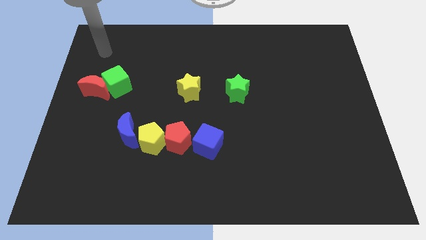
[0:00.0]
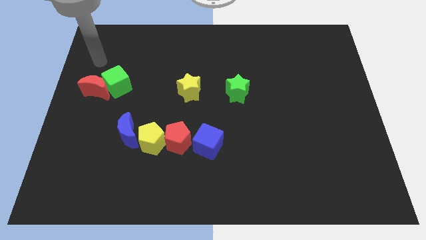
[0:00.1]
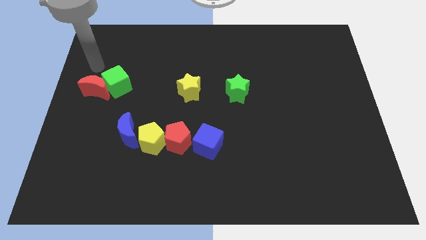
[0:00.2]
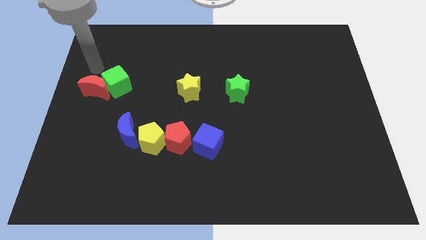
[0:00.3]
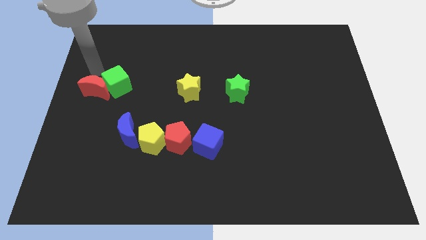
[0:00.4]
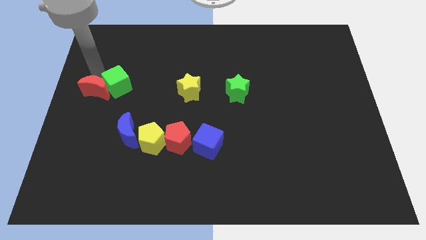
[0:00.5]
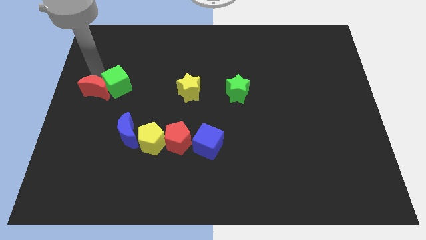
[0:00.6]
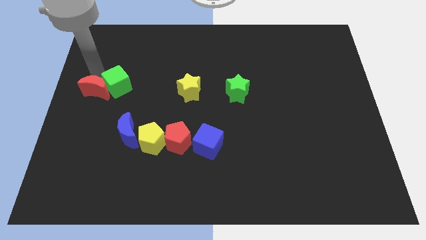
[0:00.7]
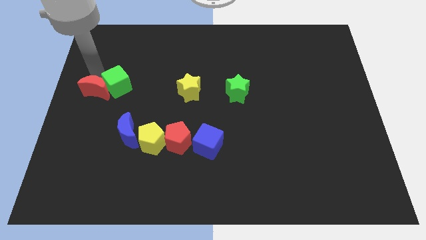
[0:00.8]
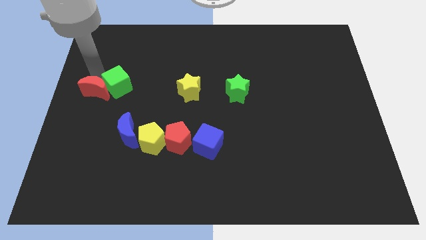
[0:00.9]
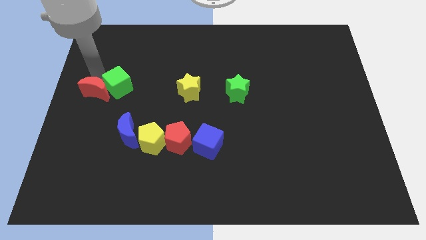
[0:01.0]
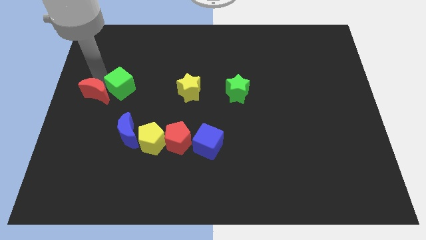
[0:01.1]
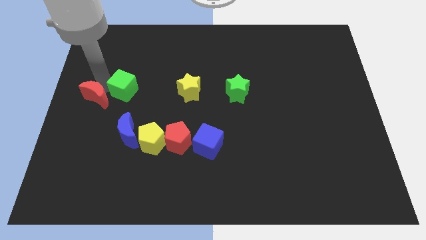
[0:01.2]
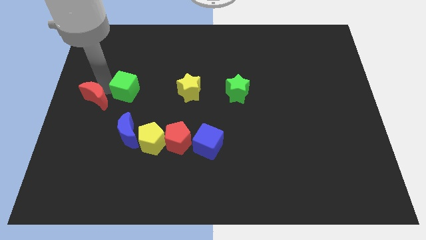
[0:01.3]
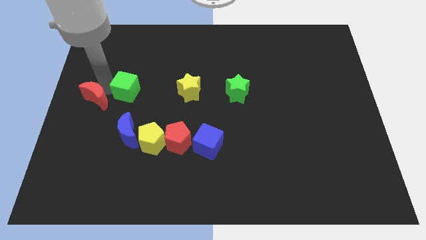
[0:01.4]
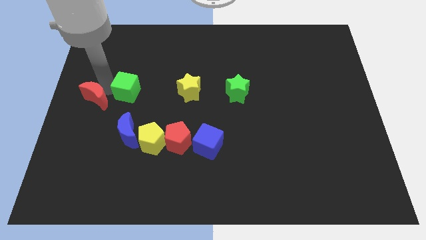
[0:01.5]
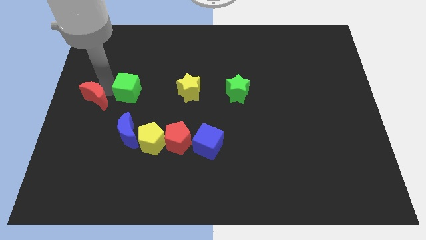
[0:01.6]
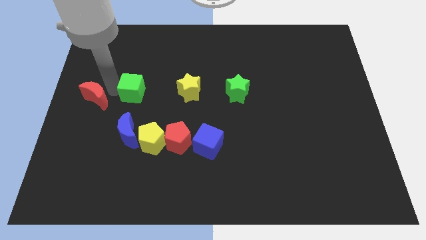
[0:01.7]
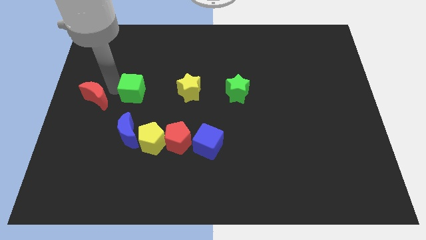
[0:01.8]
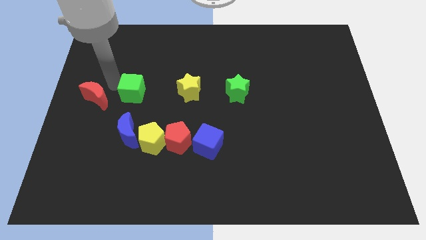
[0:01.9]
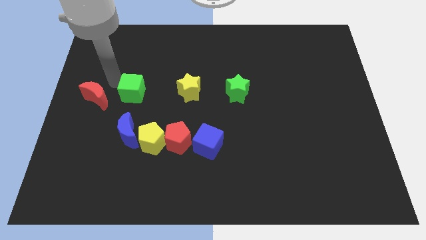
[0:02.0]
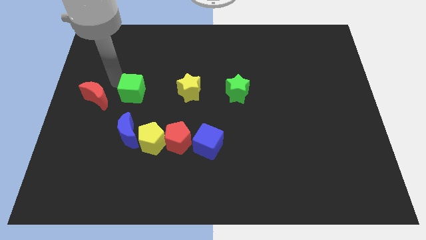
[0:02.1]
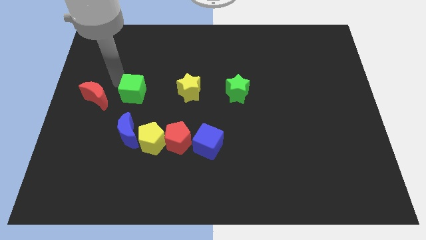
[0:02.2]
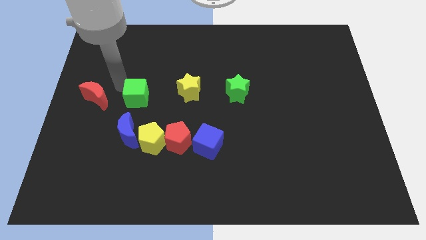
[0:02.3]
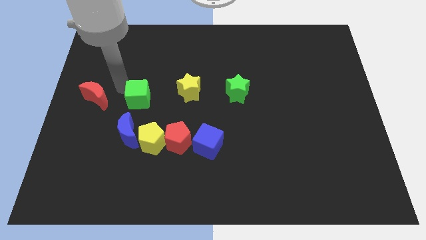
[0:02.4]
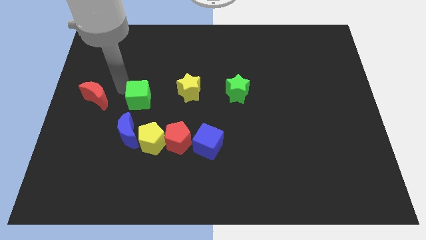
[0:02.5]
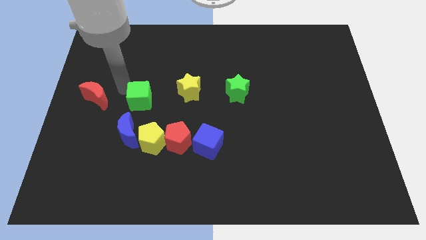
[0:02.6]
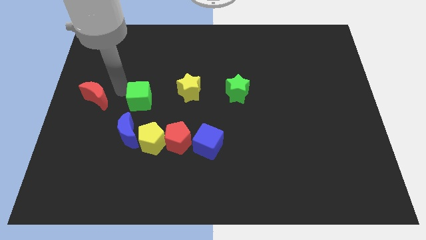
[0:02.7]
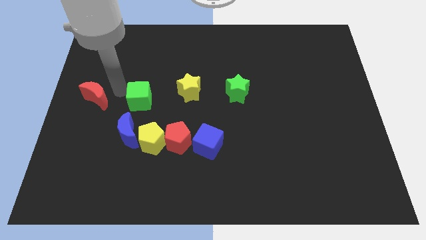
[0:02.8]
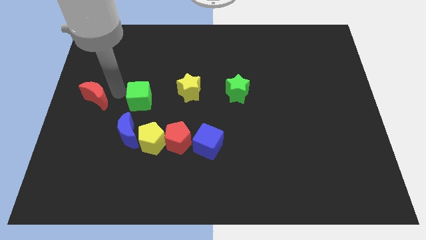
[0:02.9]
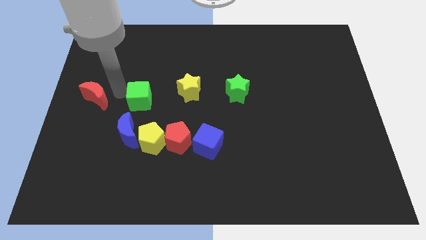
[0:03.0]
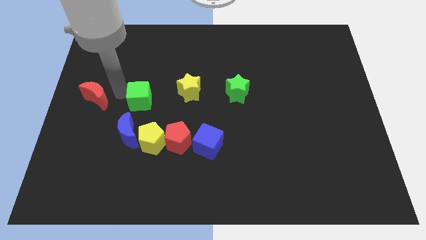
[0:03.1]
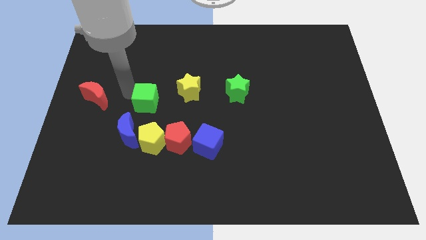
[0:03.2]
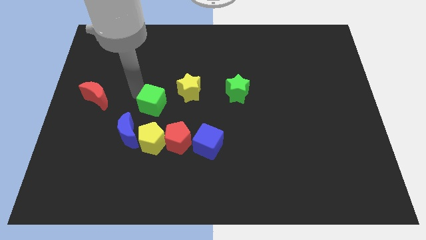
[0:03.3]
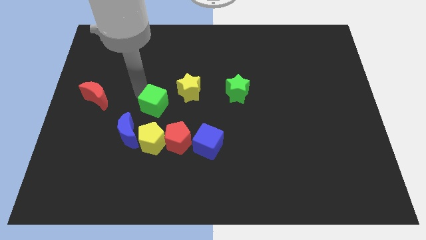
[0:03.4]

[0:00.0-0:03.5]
push the green cube to the top of the yellow pentagon

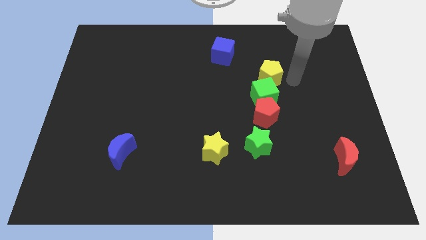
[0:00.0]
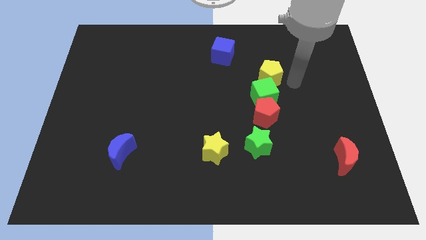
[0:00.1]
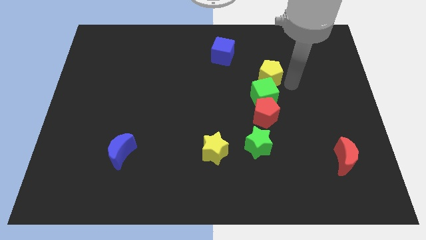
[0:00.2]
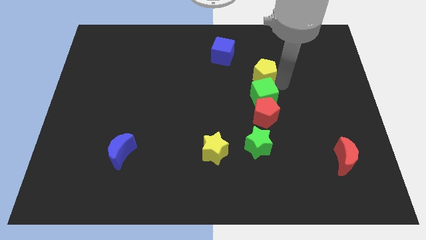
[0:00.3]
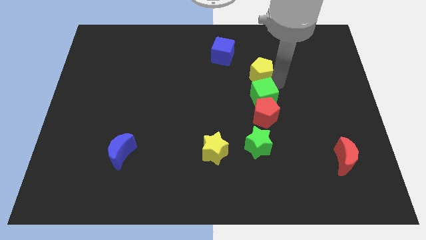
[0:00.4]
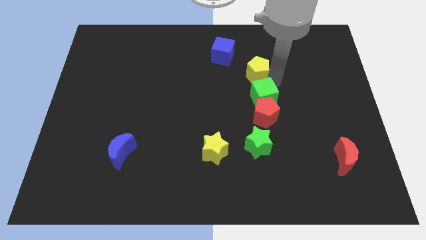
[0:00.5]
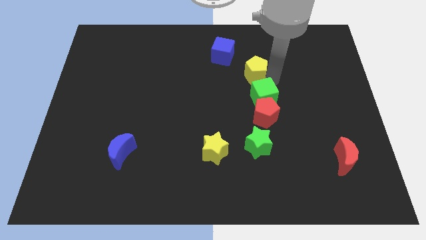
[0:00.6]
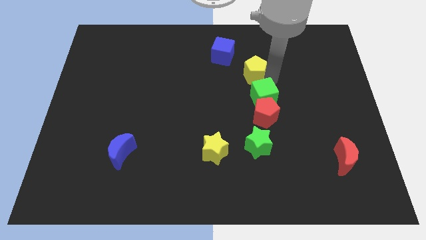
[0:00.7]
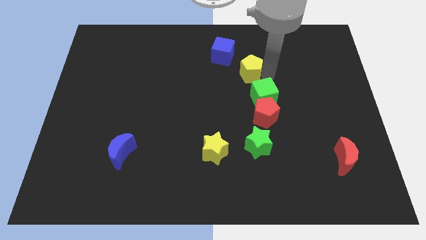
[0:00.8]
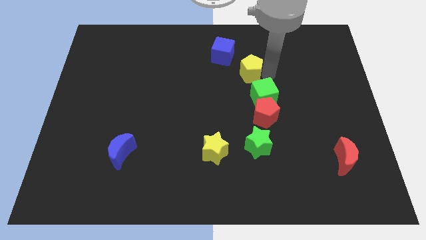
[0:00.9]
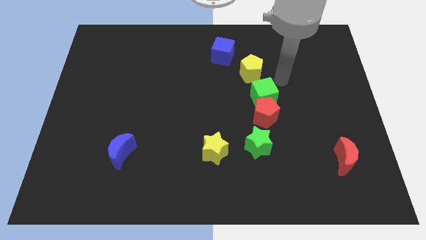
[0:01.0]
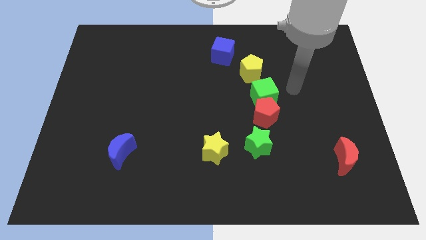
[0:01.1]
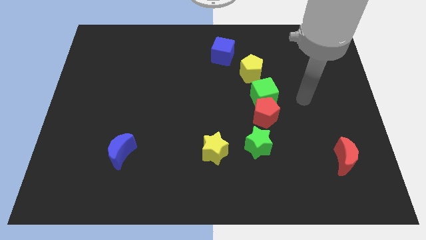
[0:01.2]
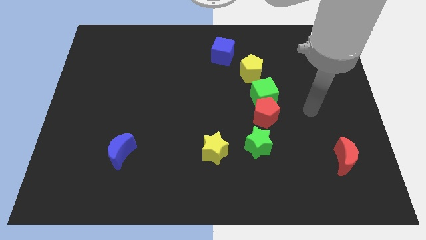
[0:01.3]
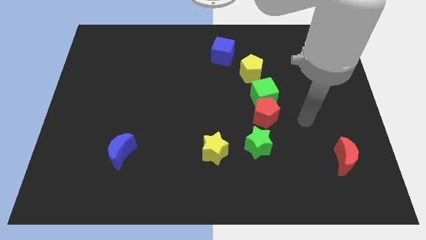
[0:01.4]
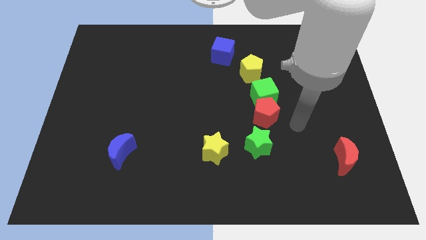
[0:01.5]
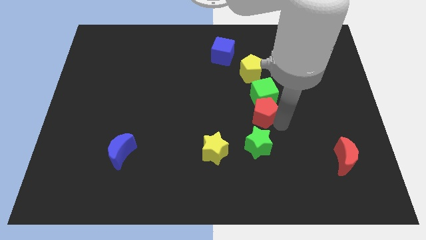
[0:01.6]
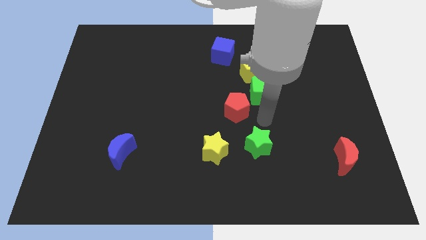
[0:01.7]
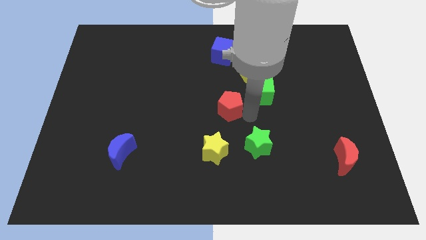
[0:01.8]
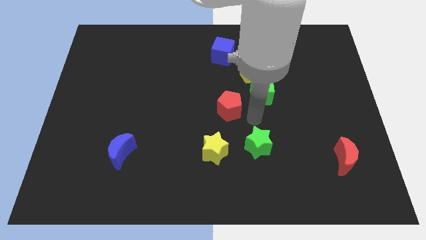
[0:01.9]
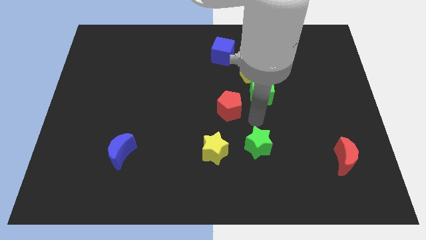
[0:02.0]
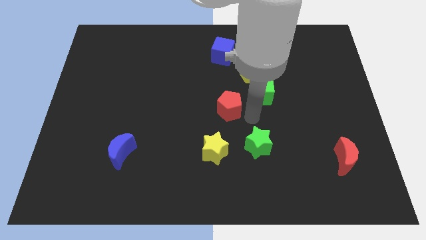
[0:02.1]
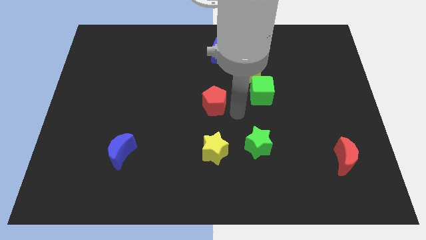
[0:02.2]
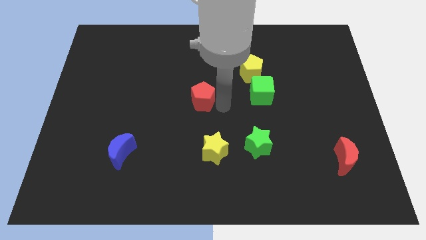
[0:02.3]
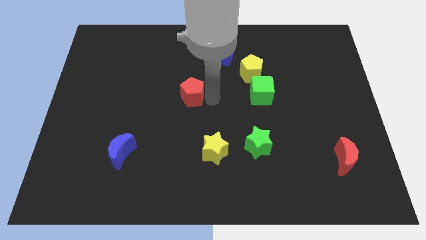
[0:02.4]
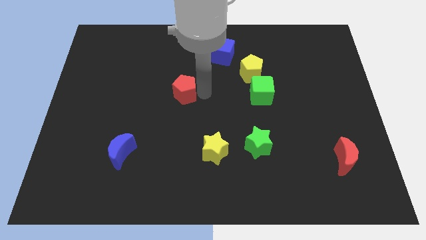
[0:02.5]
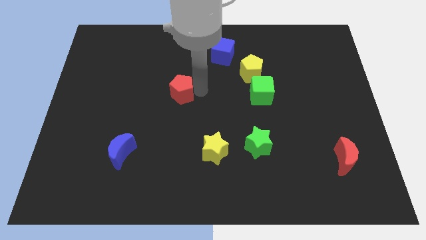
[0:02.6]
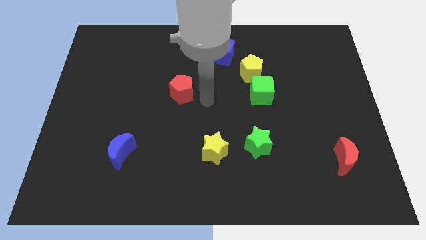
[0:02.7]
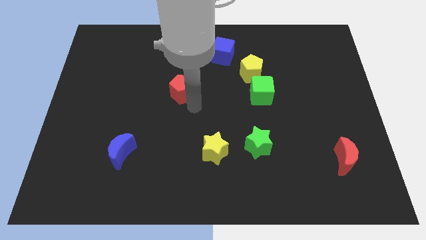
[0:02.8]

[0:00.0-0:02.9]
drag the red pentagon diagonally to blue moon

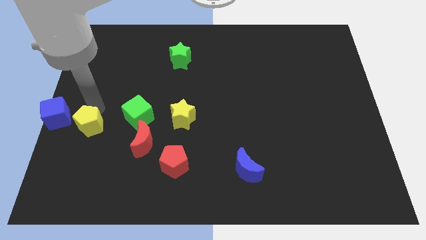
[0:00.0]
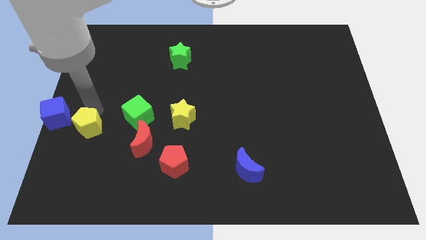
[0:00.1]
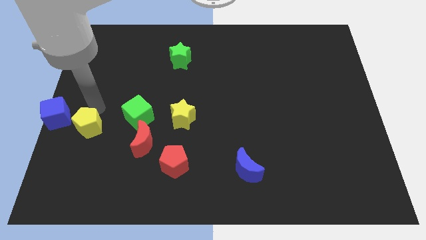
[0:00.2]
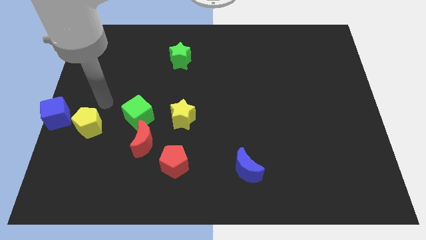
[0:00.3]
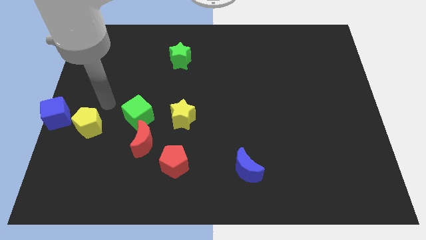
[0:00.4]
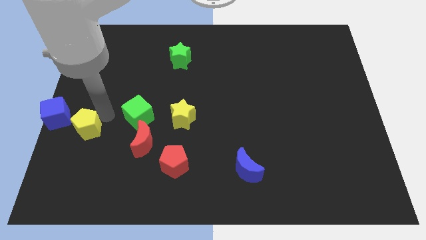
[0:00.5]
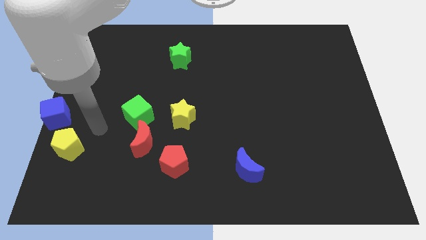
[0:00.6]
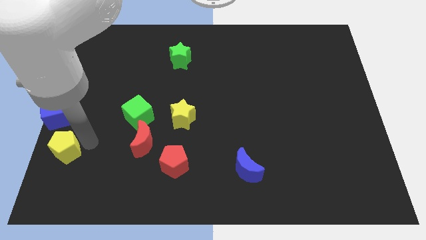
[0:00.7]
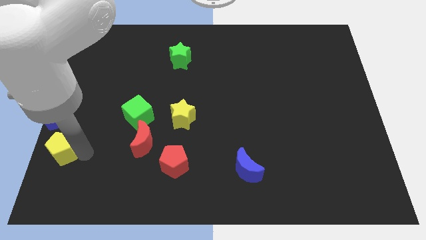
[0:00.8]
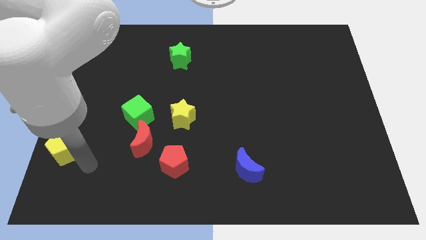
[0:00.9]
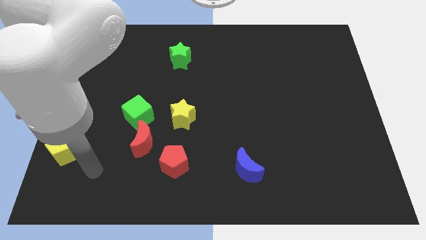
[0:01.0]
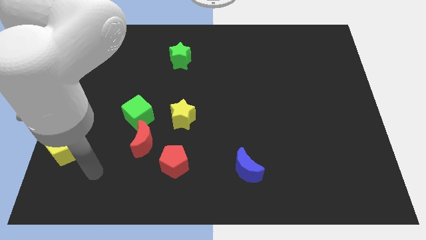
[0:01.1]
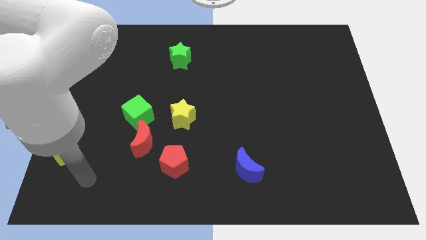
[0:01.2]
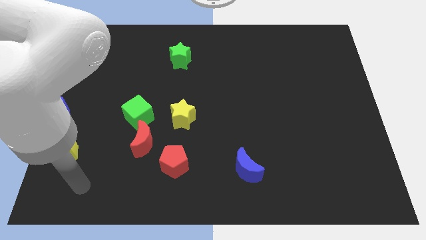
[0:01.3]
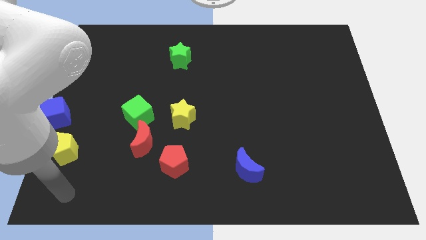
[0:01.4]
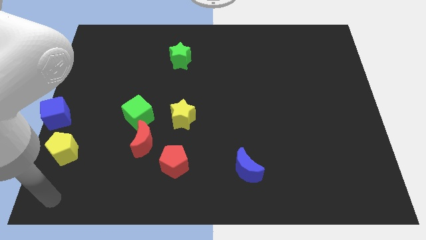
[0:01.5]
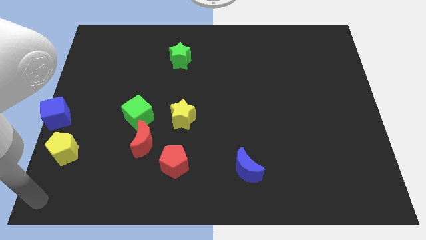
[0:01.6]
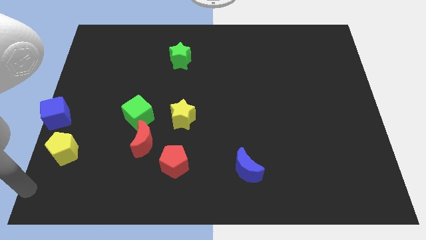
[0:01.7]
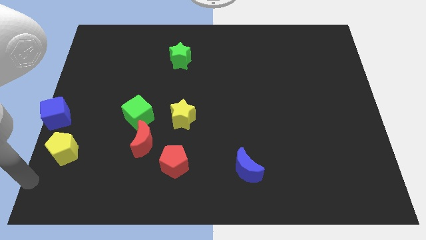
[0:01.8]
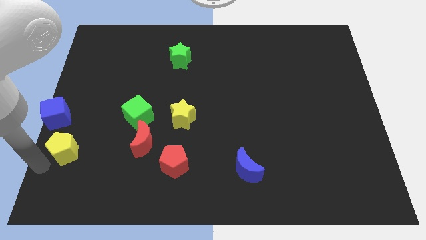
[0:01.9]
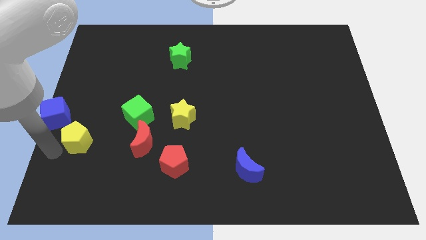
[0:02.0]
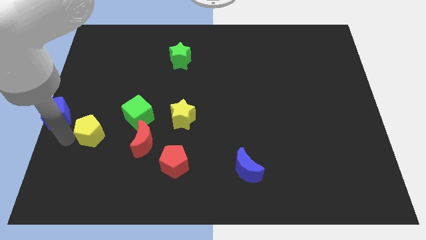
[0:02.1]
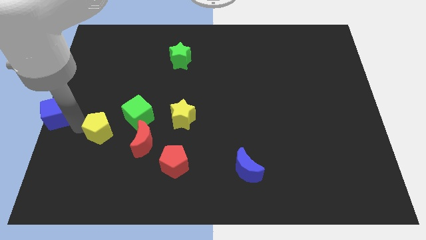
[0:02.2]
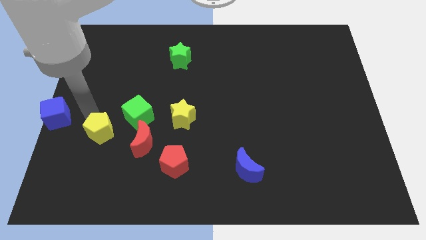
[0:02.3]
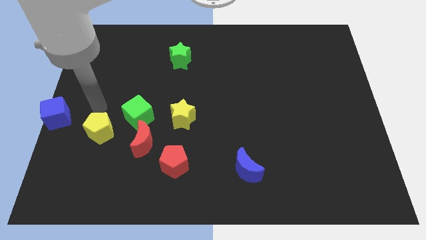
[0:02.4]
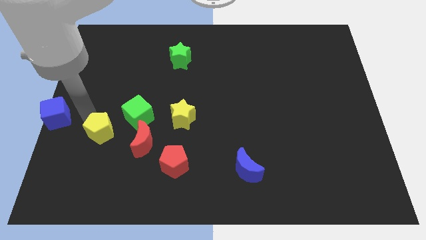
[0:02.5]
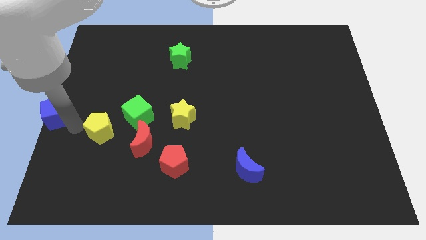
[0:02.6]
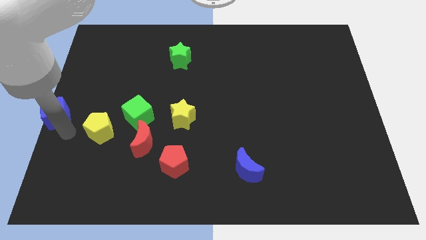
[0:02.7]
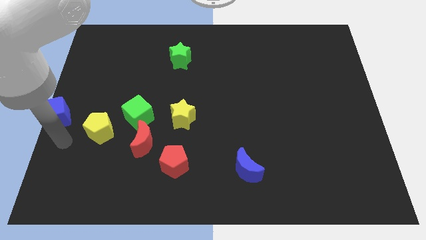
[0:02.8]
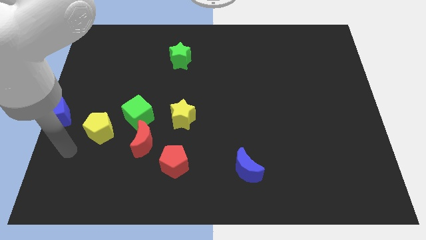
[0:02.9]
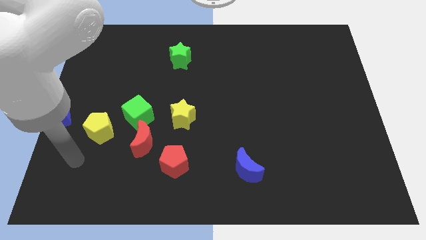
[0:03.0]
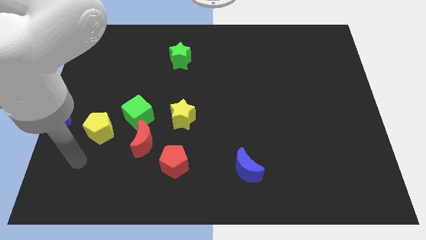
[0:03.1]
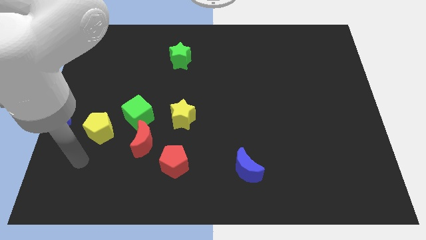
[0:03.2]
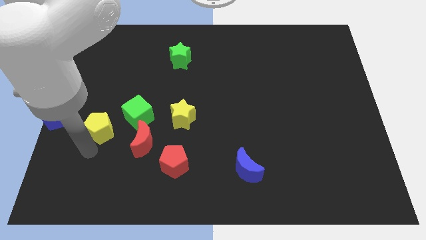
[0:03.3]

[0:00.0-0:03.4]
put the yellow pentagon diagonally in between the blue cube and the red crescent
